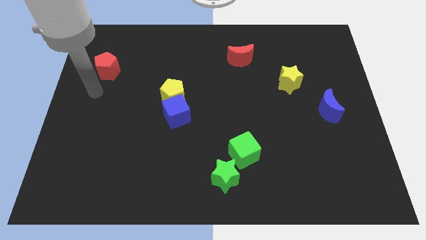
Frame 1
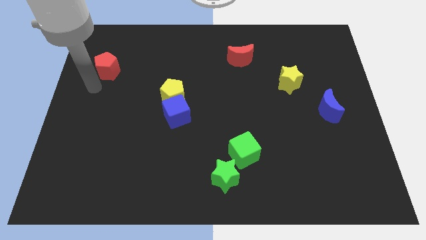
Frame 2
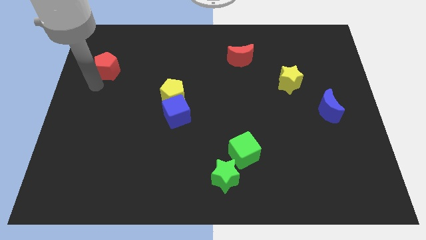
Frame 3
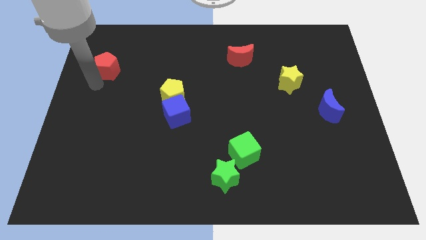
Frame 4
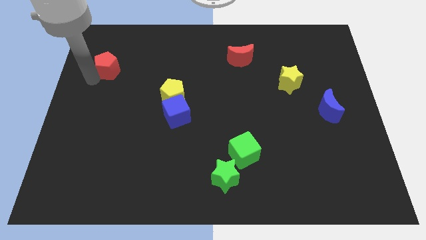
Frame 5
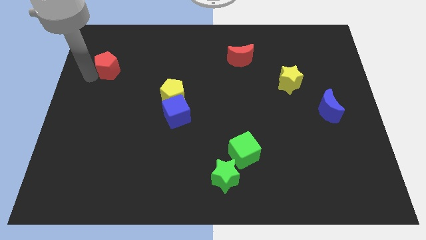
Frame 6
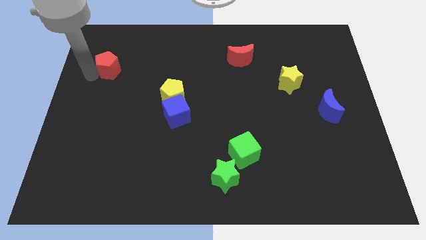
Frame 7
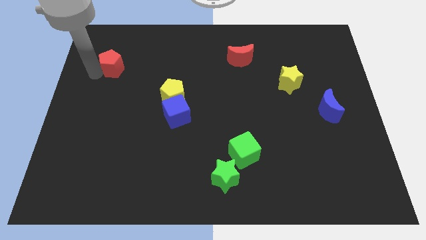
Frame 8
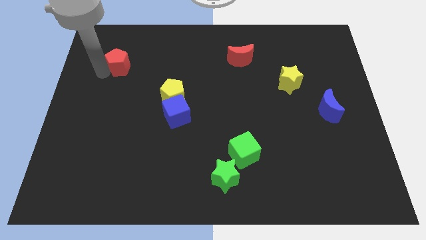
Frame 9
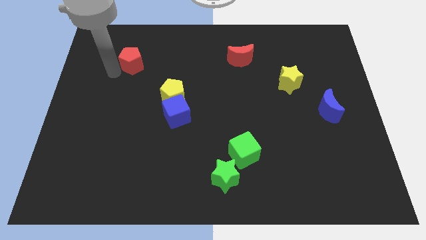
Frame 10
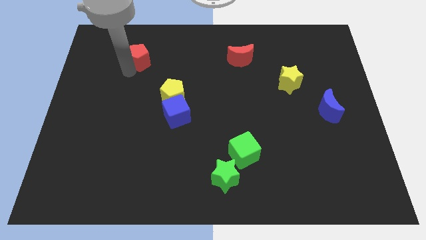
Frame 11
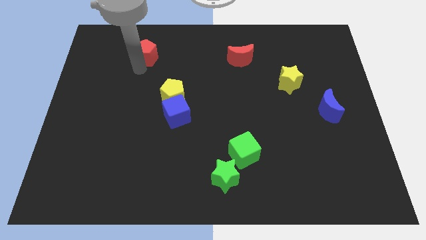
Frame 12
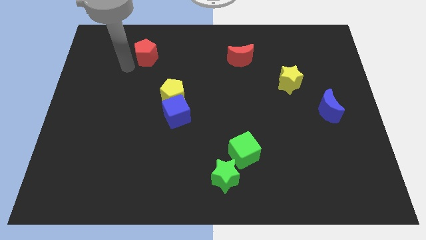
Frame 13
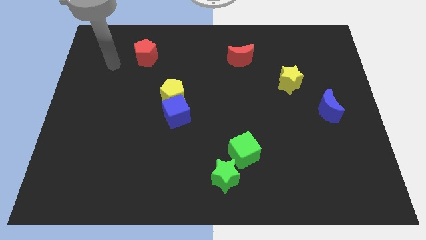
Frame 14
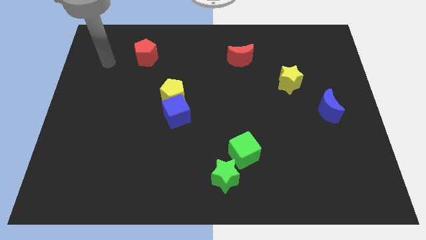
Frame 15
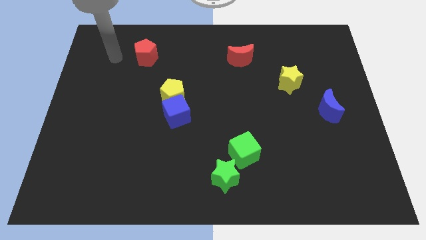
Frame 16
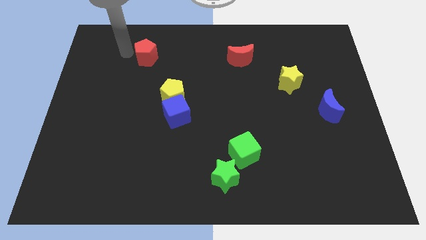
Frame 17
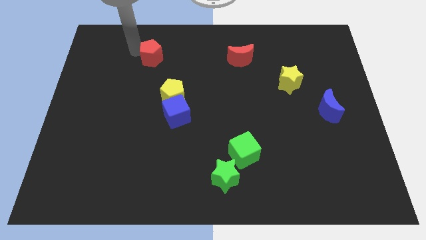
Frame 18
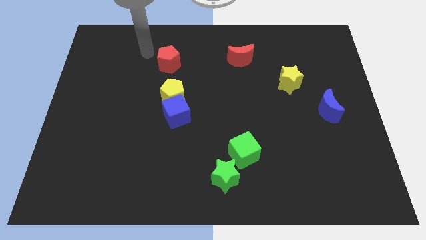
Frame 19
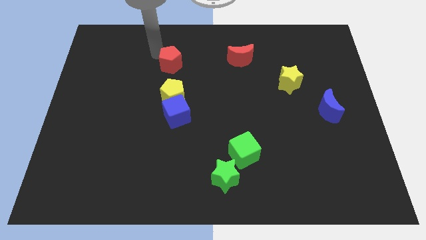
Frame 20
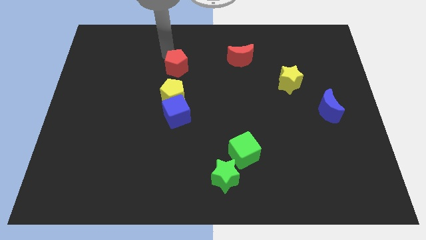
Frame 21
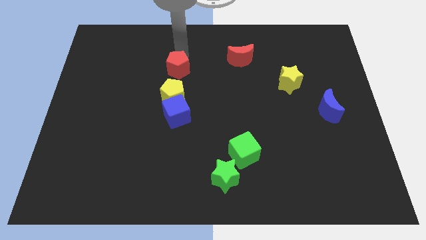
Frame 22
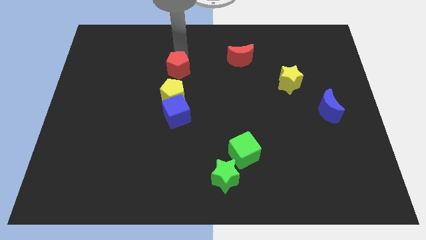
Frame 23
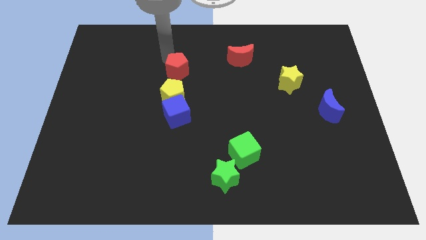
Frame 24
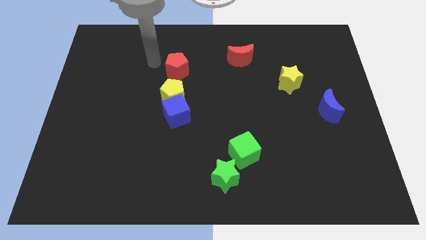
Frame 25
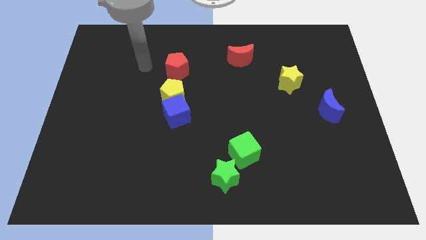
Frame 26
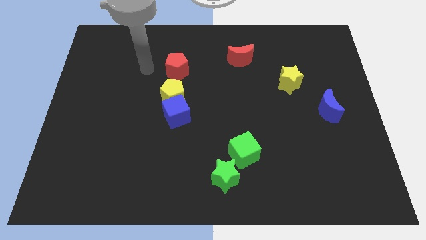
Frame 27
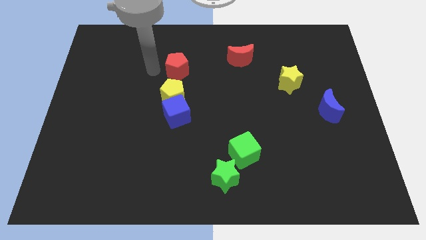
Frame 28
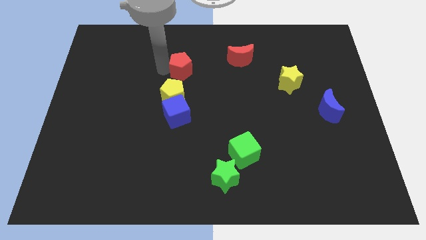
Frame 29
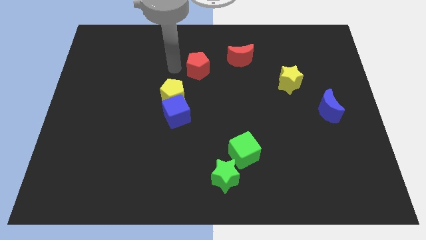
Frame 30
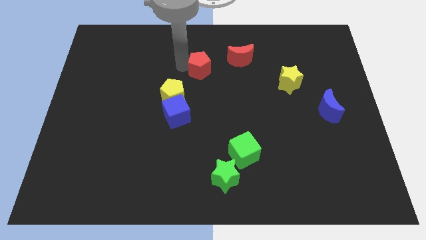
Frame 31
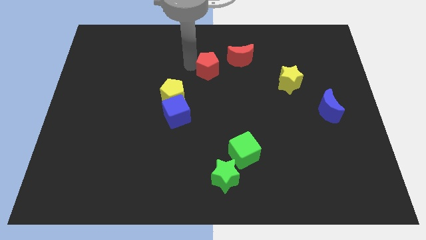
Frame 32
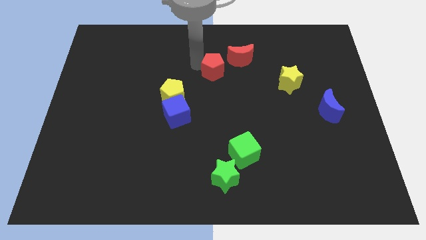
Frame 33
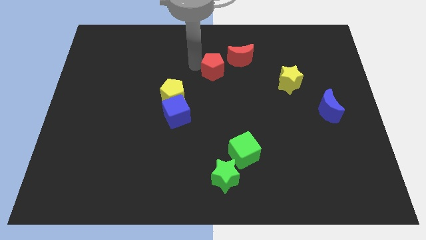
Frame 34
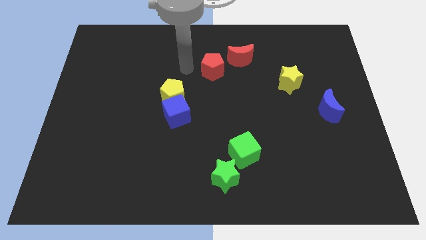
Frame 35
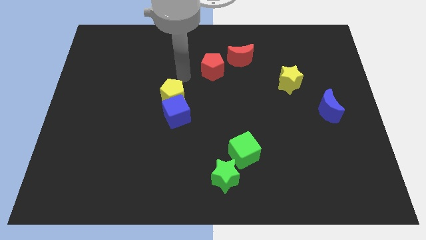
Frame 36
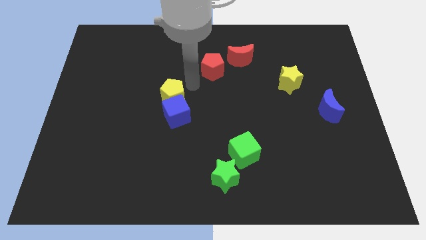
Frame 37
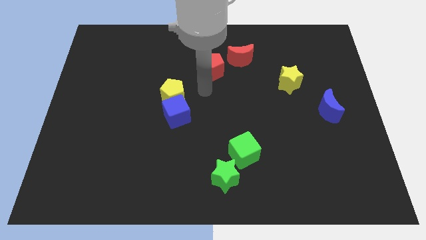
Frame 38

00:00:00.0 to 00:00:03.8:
place the red pentagon in between yellow pentagon red crescent

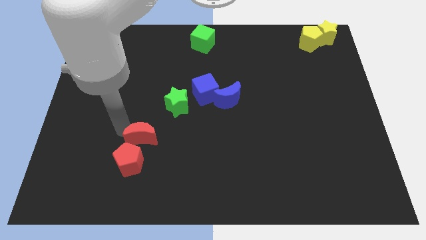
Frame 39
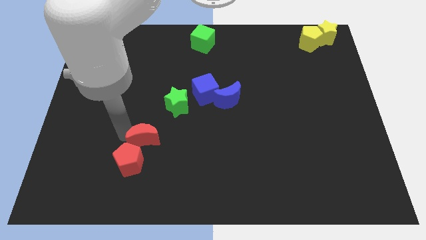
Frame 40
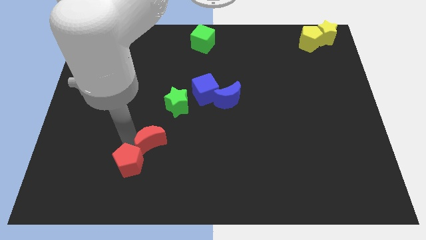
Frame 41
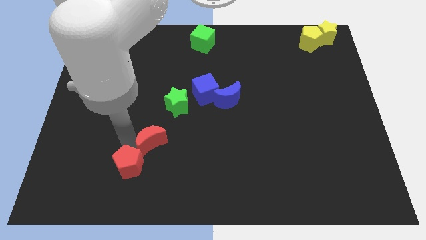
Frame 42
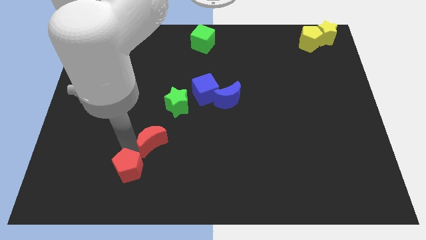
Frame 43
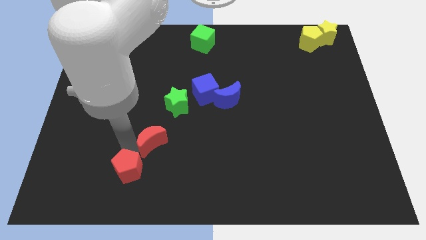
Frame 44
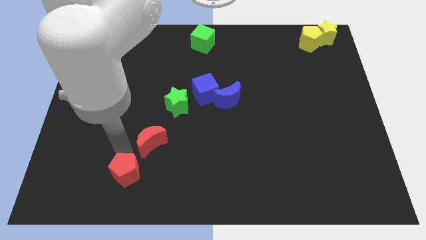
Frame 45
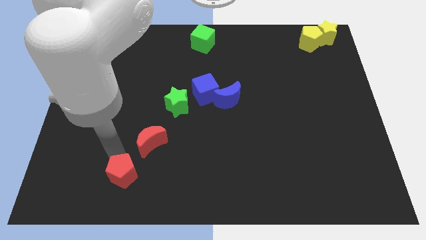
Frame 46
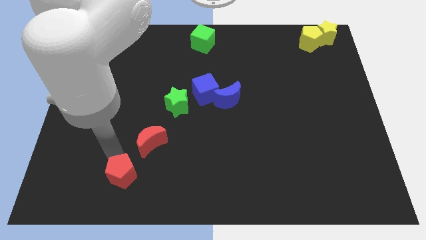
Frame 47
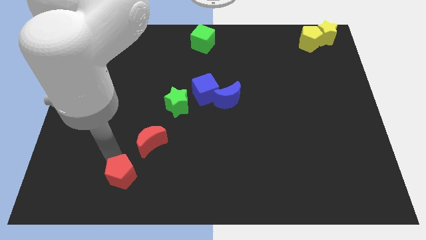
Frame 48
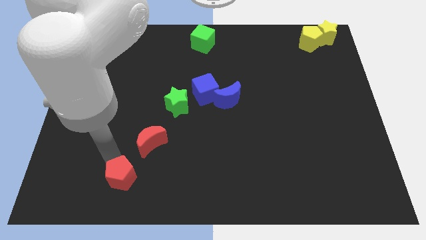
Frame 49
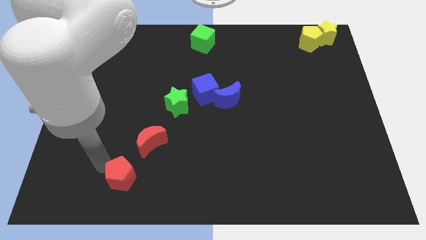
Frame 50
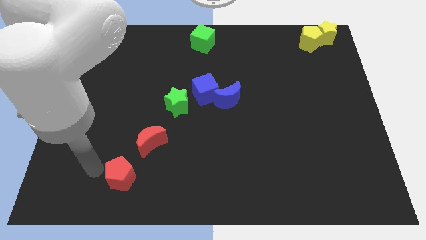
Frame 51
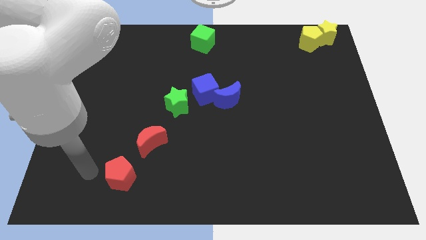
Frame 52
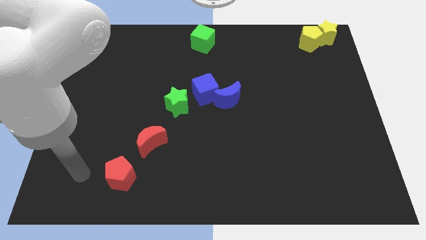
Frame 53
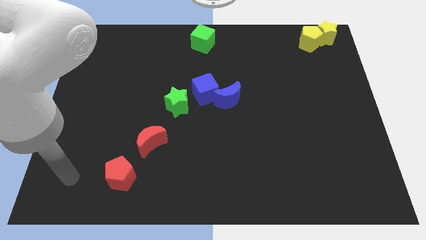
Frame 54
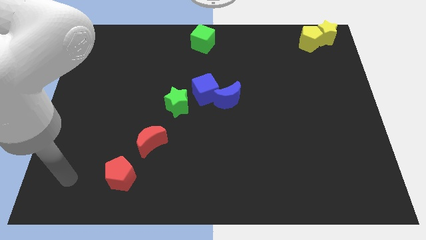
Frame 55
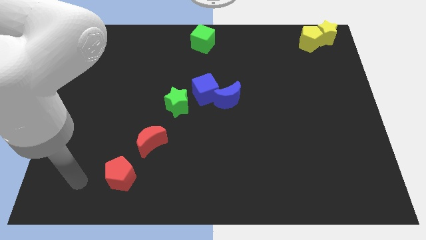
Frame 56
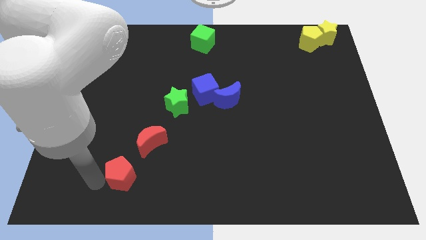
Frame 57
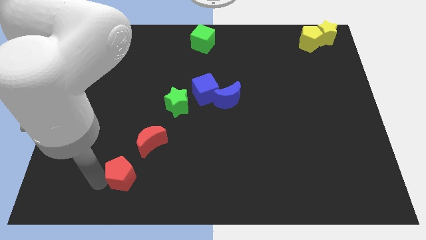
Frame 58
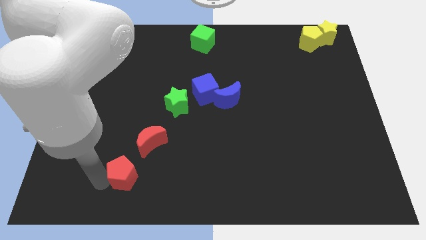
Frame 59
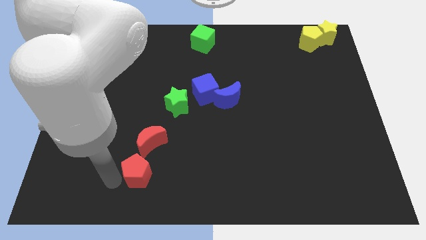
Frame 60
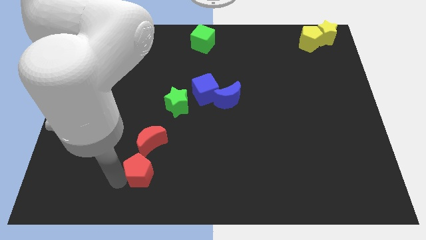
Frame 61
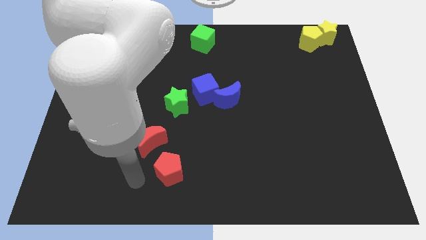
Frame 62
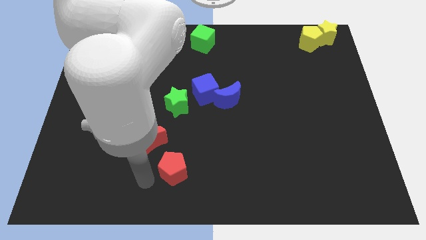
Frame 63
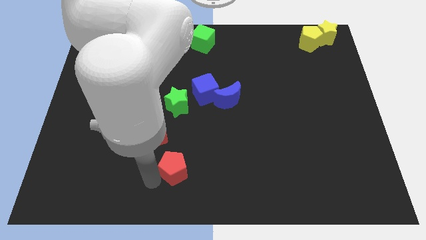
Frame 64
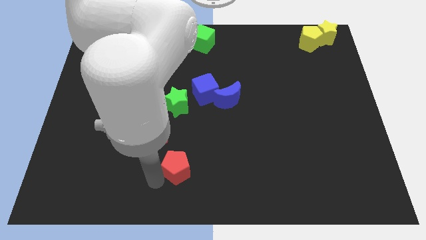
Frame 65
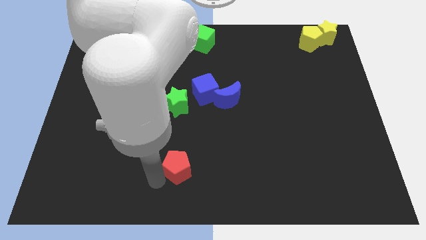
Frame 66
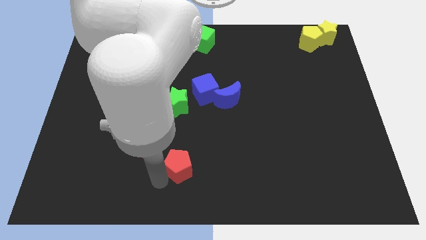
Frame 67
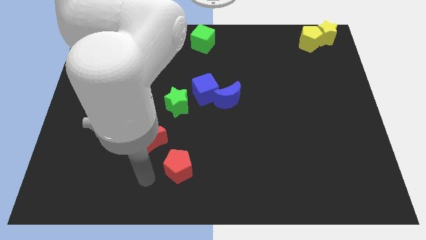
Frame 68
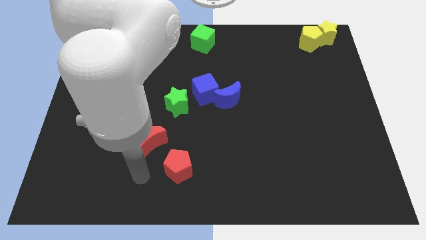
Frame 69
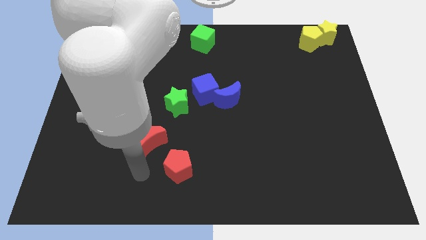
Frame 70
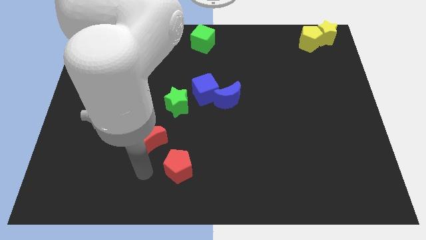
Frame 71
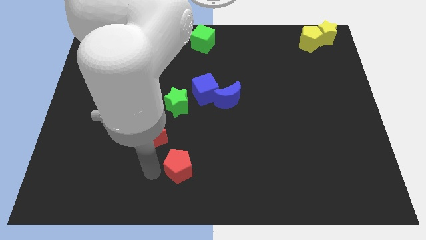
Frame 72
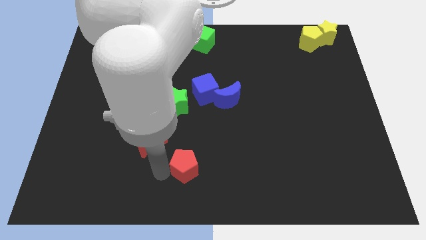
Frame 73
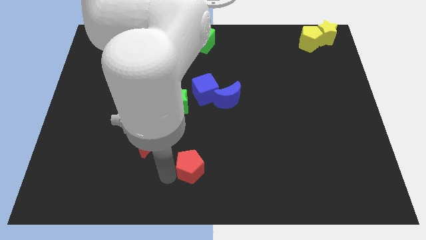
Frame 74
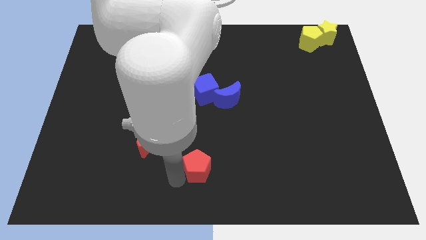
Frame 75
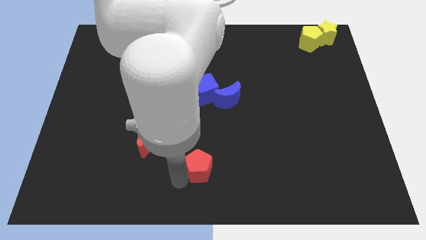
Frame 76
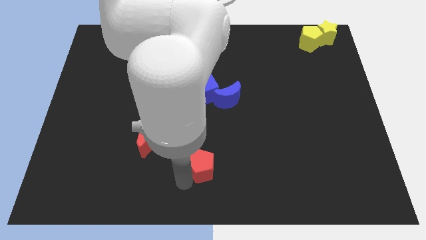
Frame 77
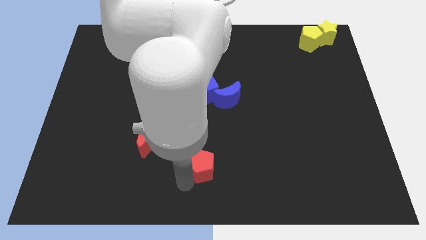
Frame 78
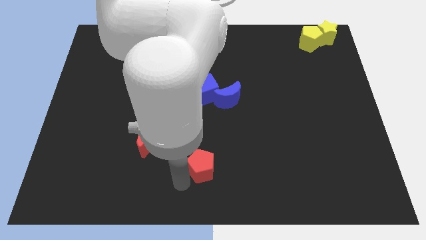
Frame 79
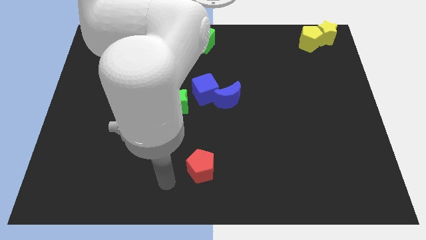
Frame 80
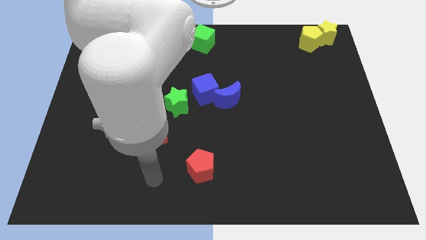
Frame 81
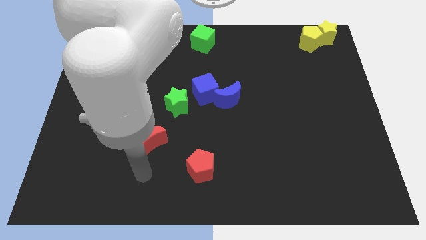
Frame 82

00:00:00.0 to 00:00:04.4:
separate red pentagon from red moon

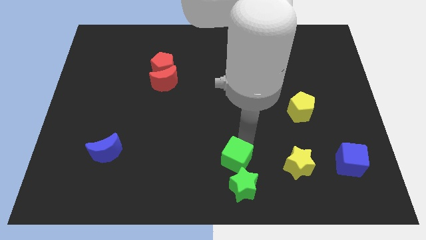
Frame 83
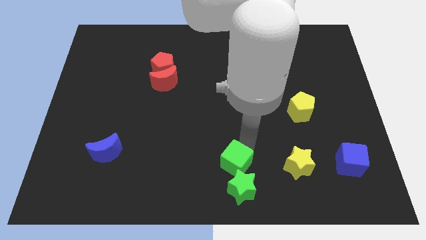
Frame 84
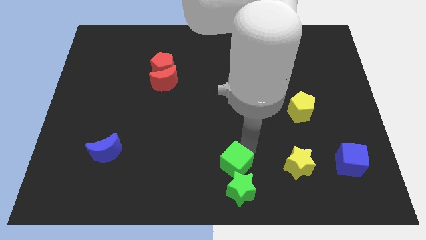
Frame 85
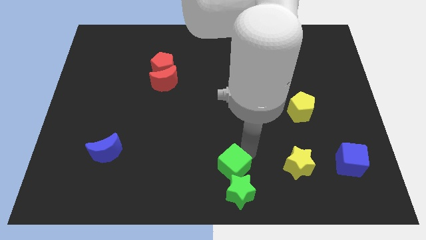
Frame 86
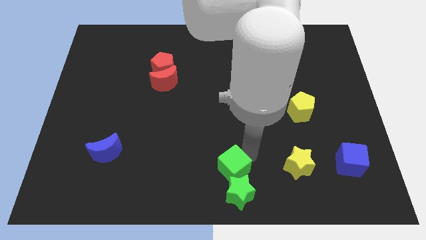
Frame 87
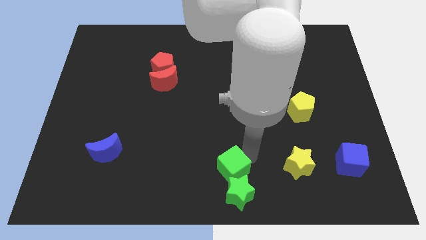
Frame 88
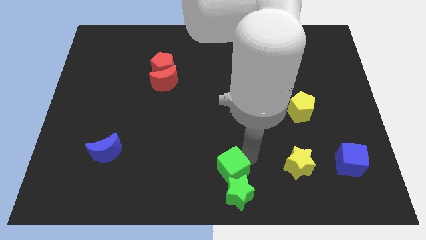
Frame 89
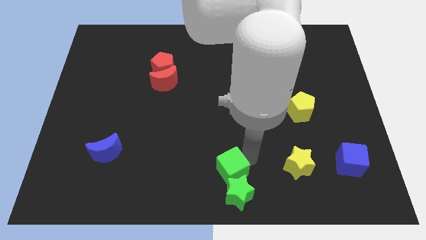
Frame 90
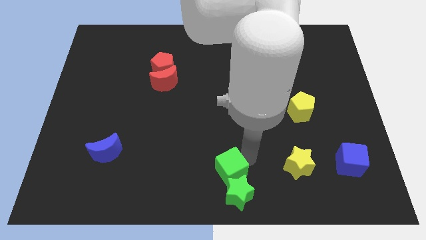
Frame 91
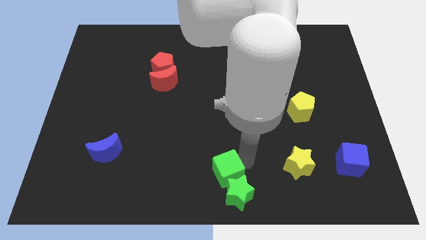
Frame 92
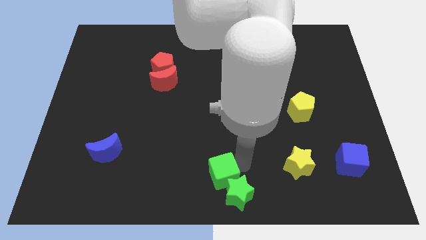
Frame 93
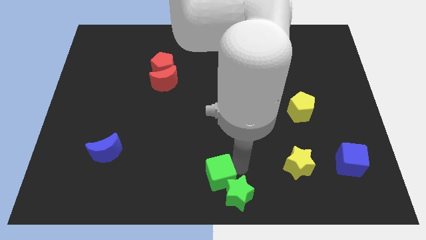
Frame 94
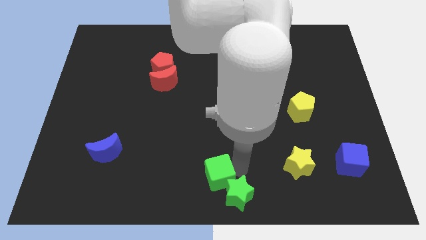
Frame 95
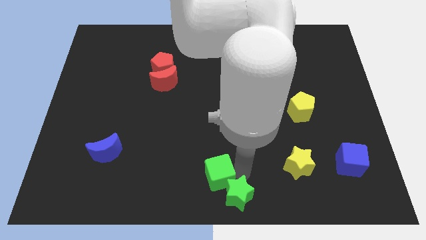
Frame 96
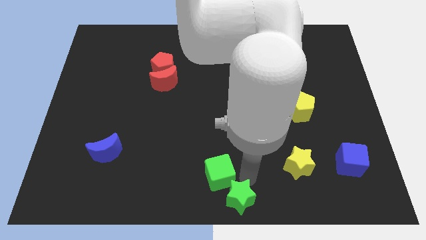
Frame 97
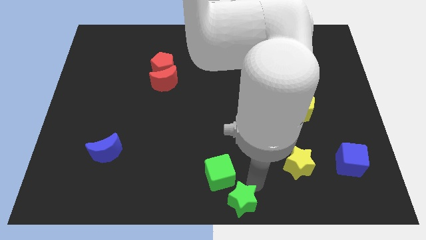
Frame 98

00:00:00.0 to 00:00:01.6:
push the green cube to the top left of the green star
